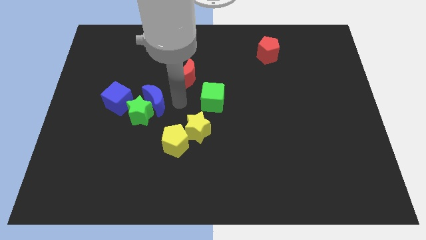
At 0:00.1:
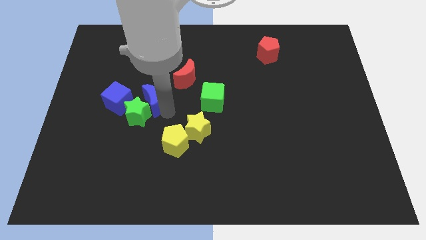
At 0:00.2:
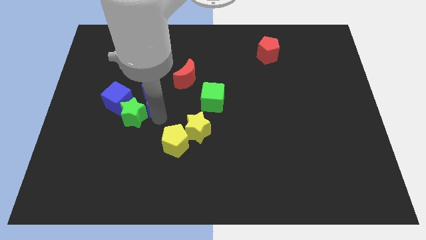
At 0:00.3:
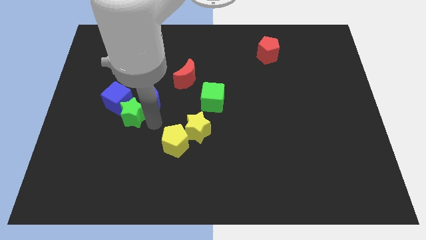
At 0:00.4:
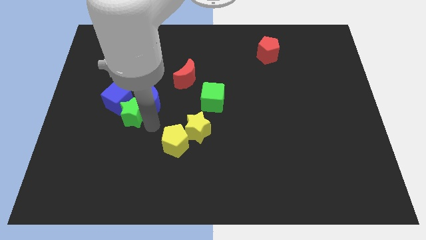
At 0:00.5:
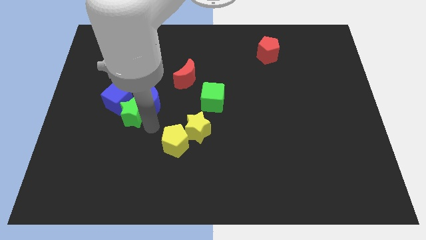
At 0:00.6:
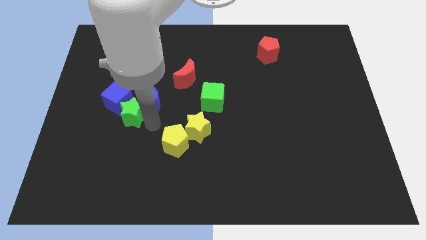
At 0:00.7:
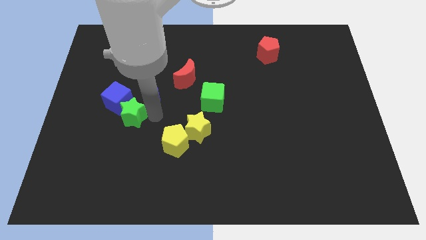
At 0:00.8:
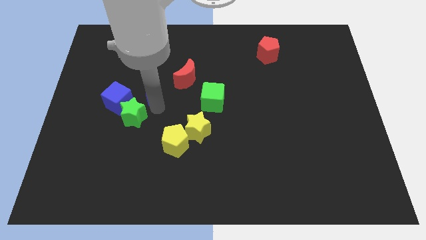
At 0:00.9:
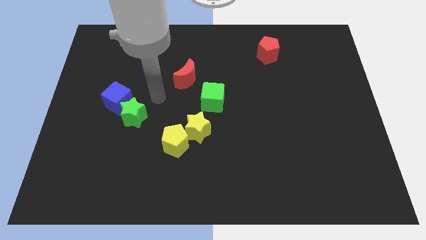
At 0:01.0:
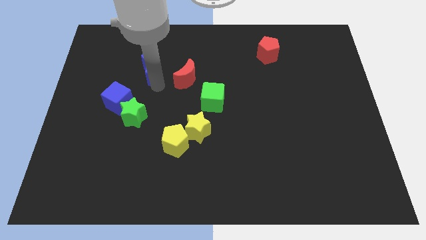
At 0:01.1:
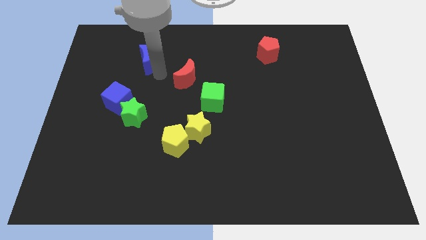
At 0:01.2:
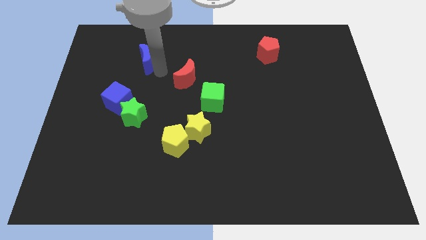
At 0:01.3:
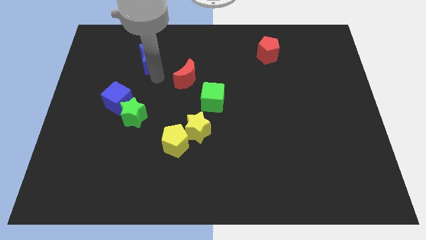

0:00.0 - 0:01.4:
separate the blue crescent and green star blocks

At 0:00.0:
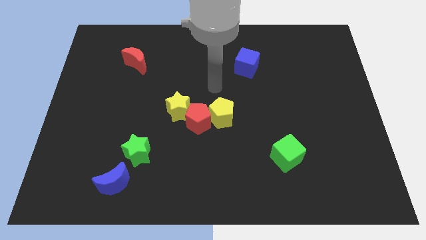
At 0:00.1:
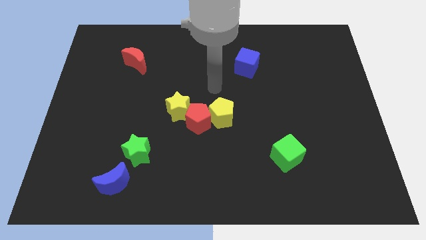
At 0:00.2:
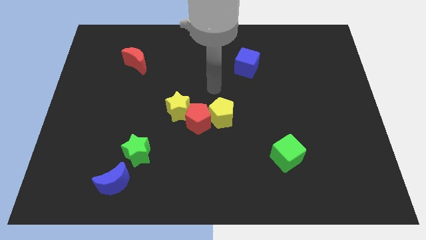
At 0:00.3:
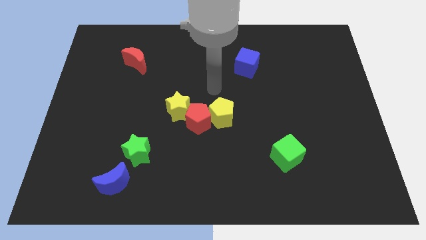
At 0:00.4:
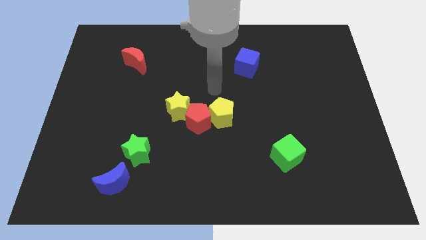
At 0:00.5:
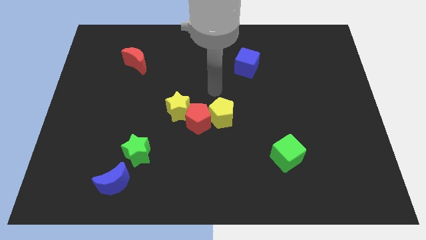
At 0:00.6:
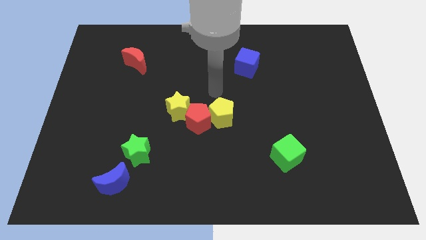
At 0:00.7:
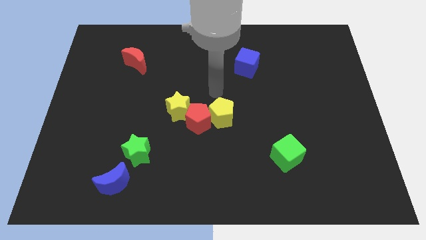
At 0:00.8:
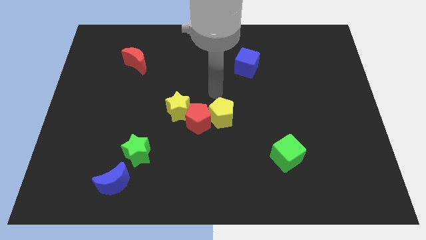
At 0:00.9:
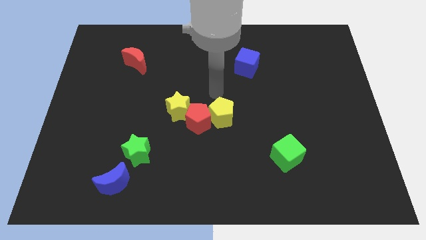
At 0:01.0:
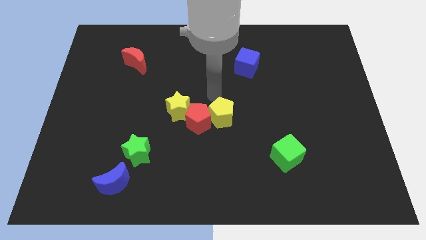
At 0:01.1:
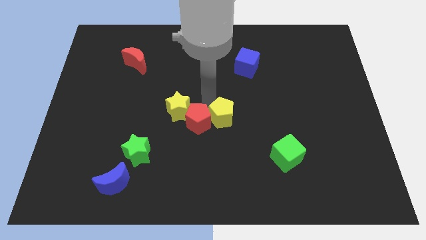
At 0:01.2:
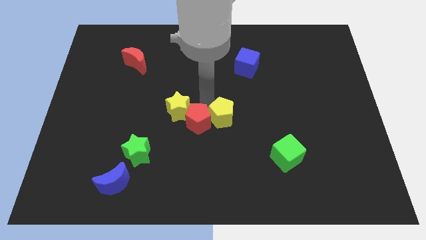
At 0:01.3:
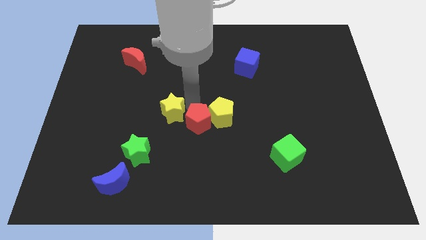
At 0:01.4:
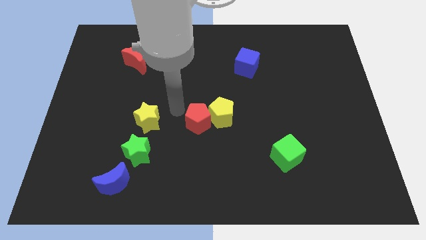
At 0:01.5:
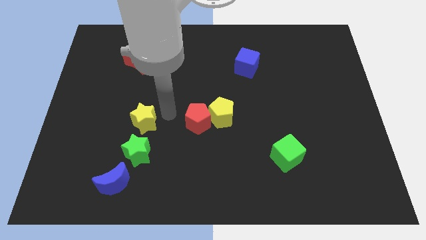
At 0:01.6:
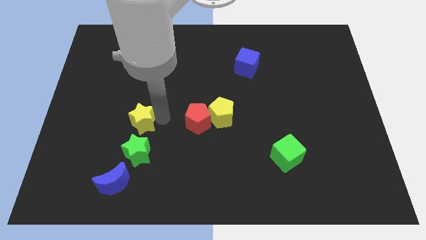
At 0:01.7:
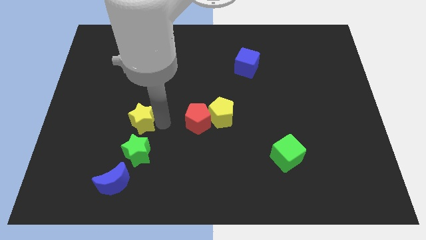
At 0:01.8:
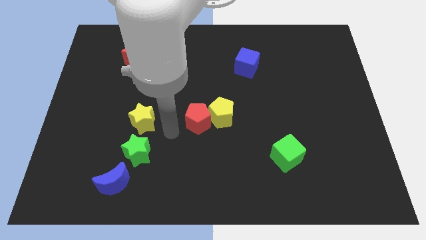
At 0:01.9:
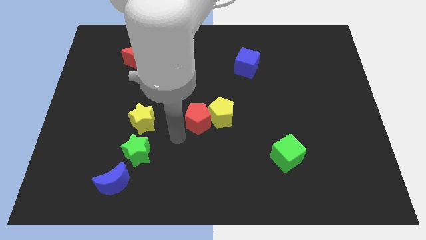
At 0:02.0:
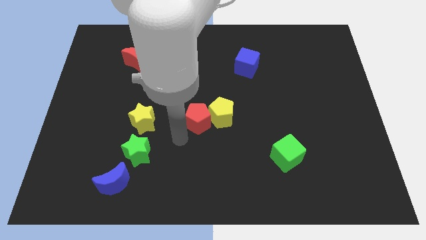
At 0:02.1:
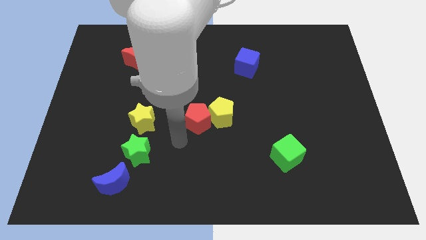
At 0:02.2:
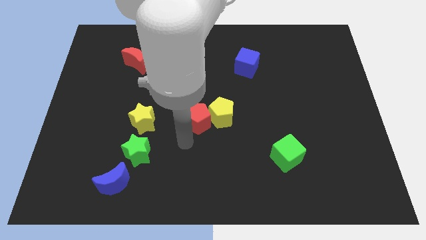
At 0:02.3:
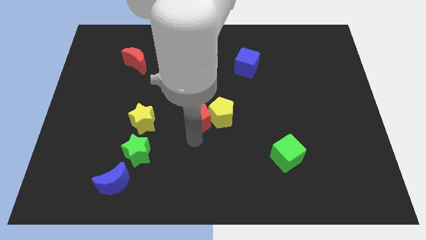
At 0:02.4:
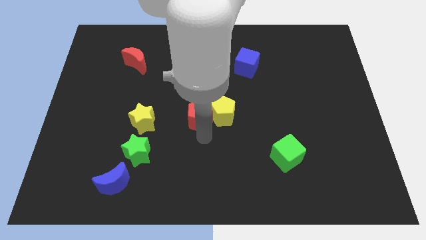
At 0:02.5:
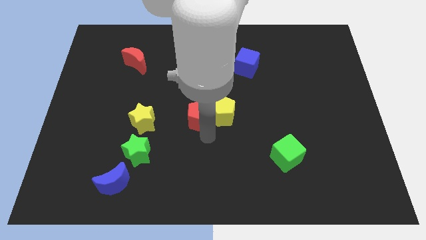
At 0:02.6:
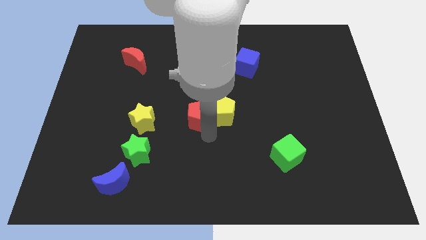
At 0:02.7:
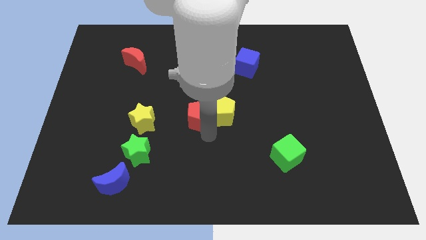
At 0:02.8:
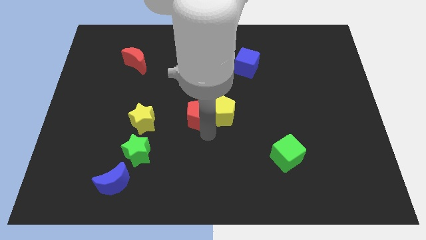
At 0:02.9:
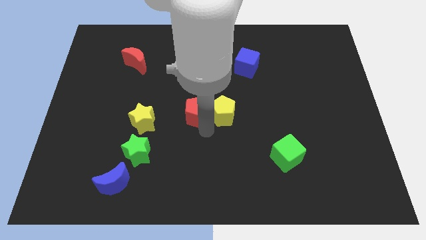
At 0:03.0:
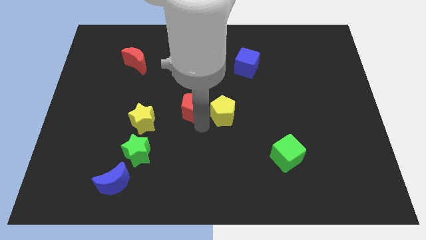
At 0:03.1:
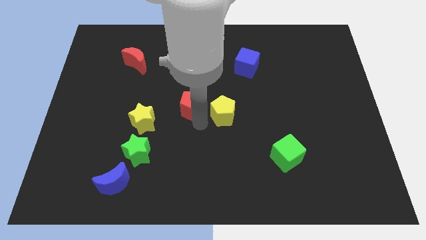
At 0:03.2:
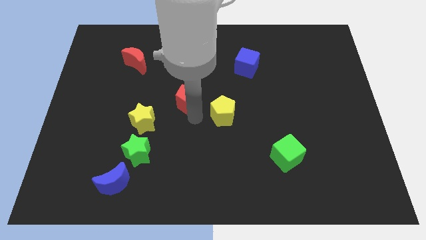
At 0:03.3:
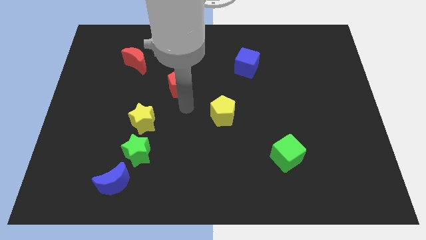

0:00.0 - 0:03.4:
separate the yellow star and the red pentagon

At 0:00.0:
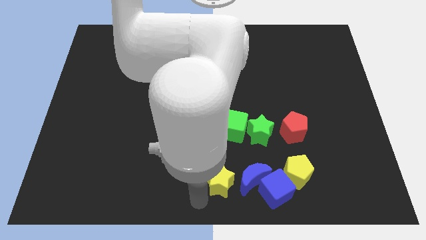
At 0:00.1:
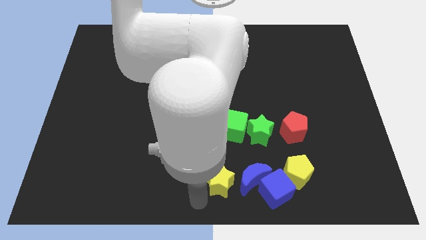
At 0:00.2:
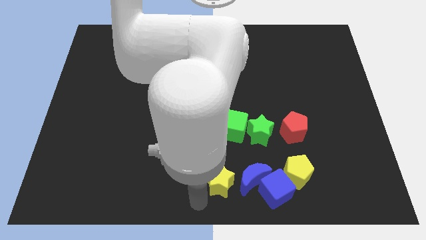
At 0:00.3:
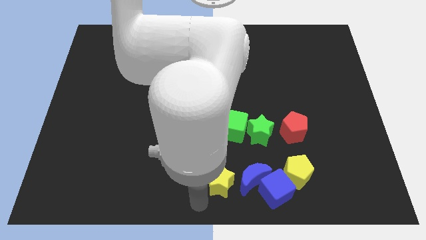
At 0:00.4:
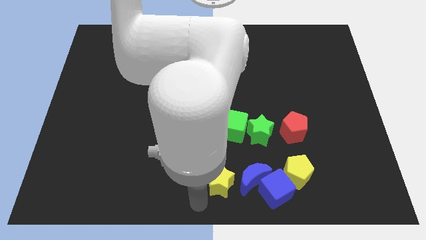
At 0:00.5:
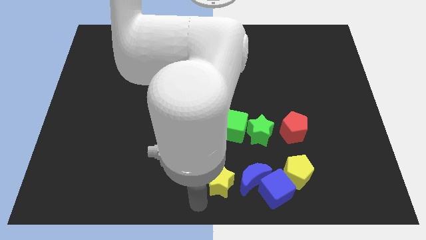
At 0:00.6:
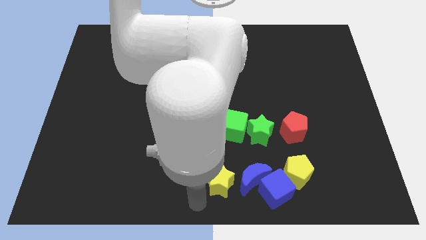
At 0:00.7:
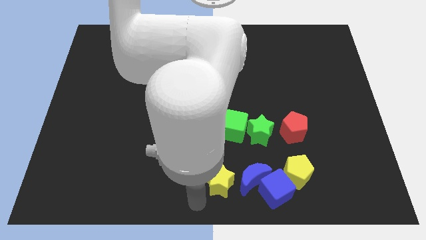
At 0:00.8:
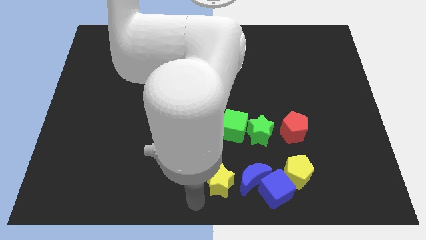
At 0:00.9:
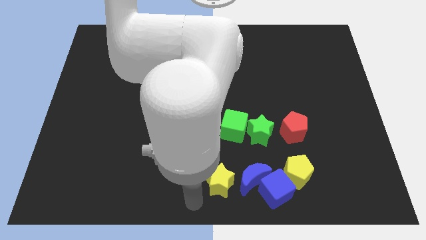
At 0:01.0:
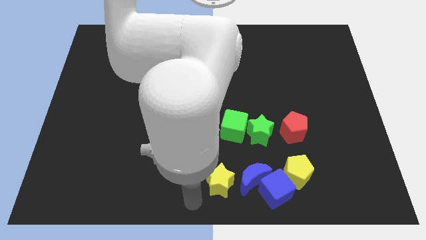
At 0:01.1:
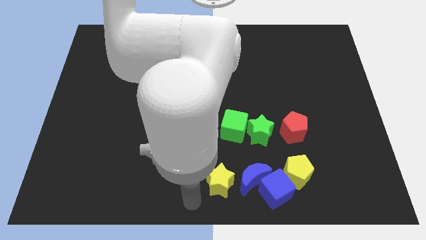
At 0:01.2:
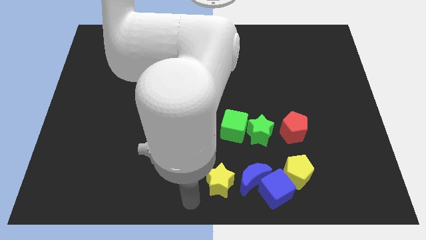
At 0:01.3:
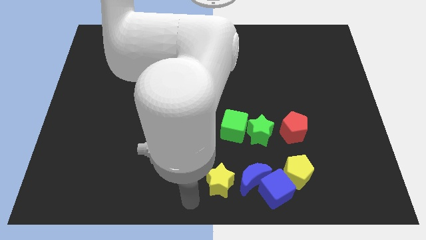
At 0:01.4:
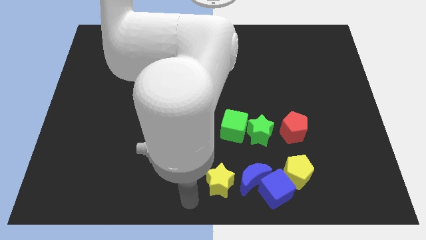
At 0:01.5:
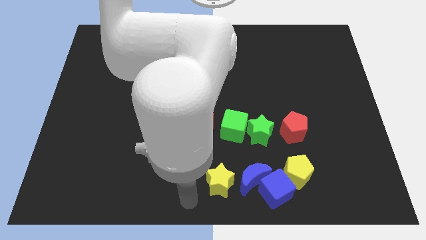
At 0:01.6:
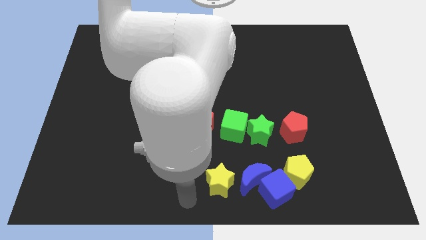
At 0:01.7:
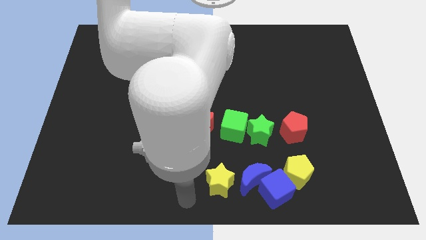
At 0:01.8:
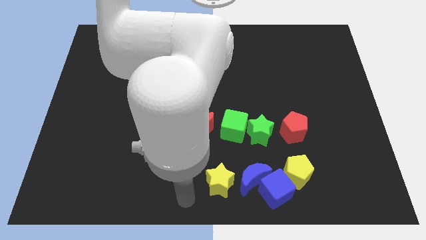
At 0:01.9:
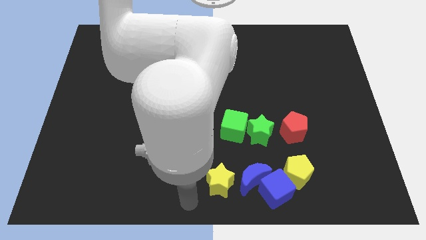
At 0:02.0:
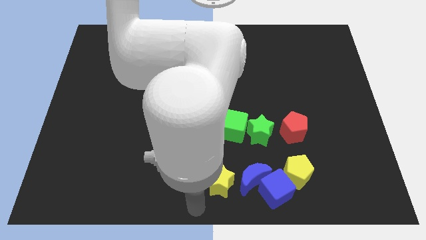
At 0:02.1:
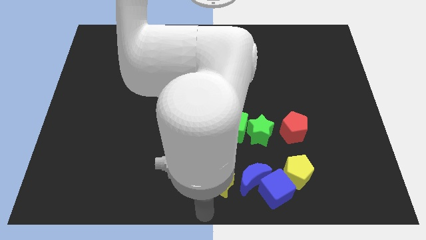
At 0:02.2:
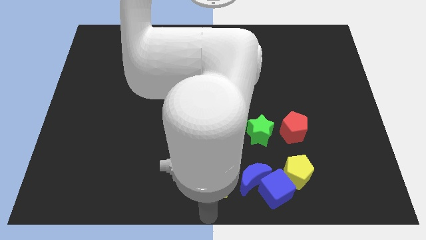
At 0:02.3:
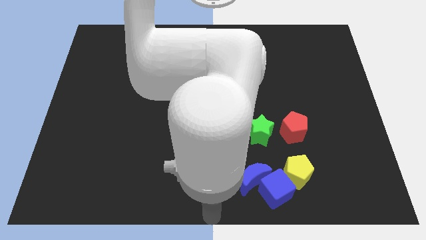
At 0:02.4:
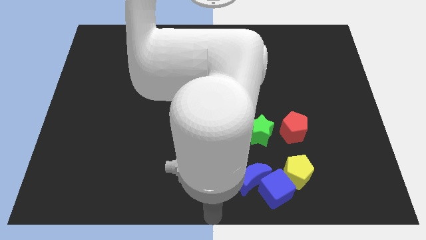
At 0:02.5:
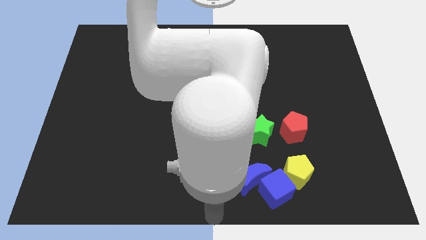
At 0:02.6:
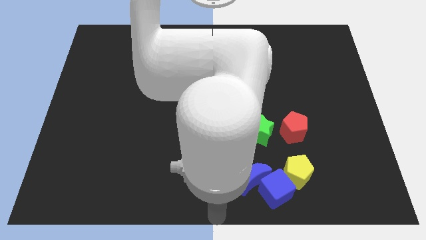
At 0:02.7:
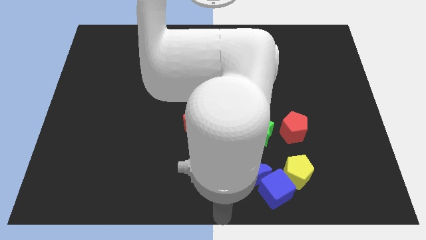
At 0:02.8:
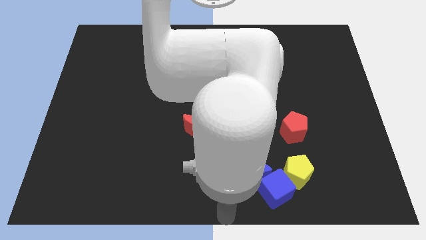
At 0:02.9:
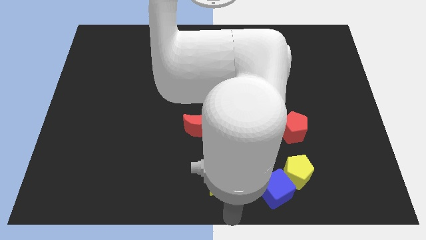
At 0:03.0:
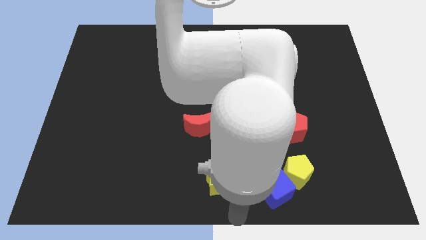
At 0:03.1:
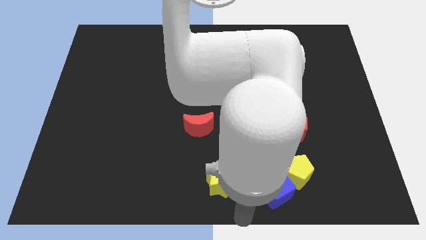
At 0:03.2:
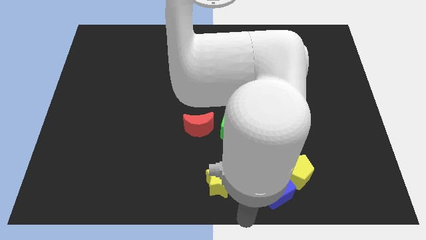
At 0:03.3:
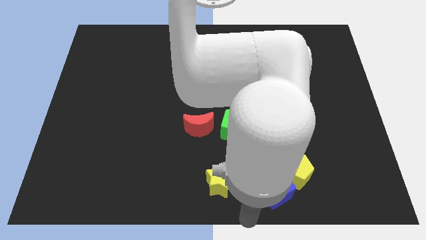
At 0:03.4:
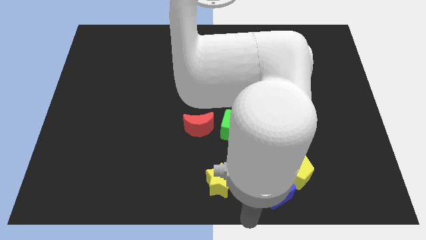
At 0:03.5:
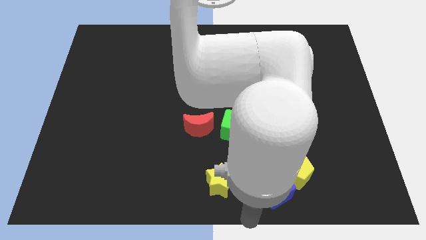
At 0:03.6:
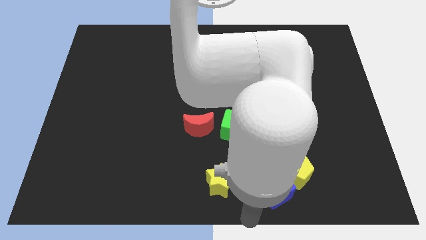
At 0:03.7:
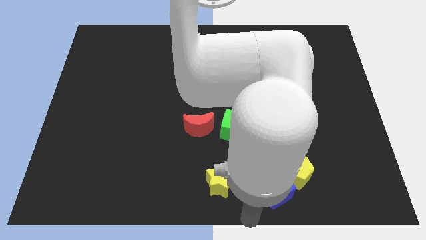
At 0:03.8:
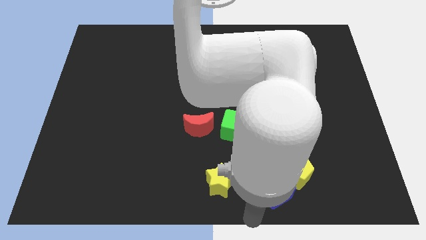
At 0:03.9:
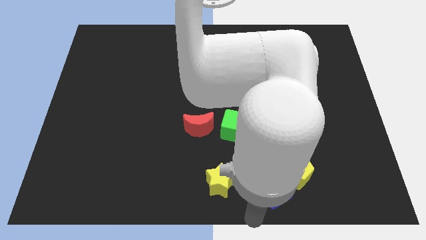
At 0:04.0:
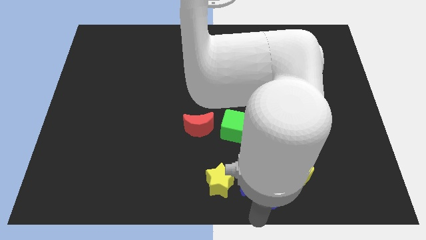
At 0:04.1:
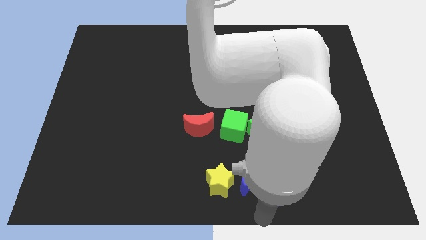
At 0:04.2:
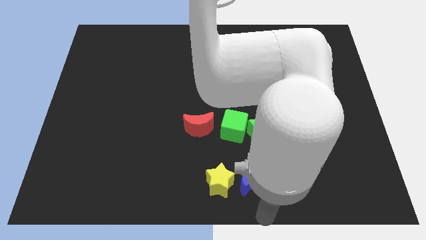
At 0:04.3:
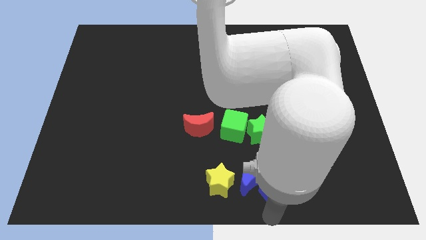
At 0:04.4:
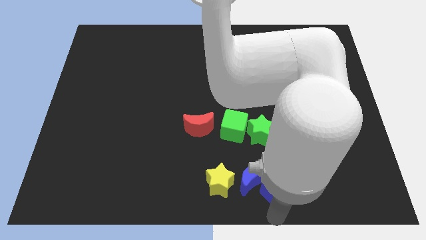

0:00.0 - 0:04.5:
touch the bottom of the blue cube
